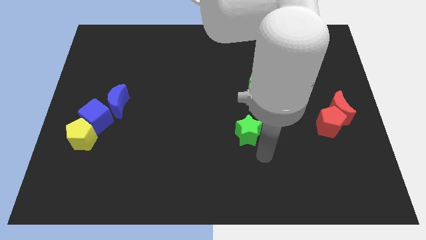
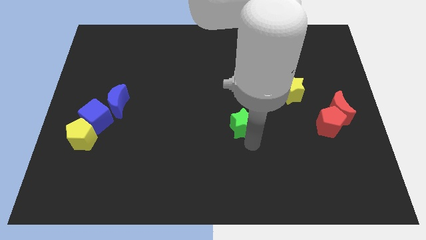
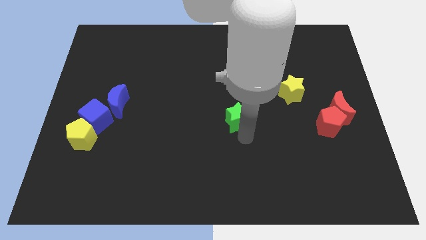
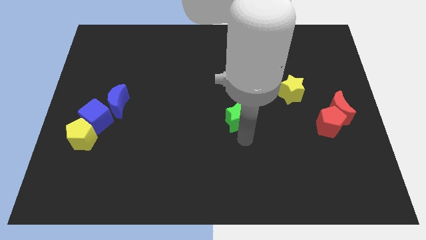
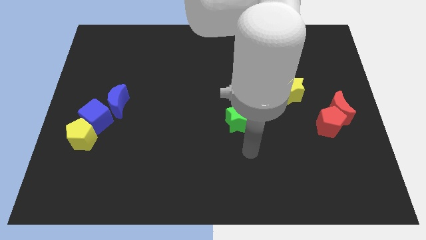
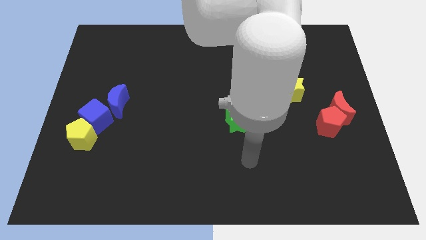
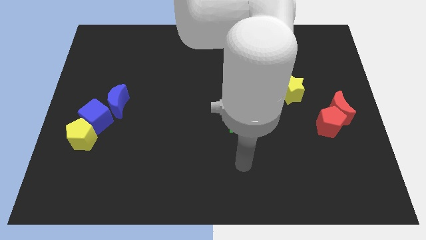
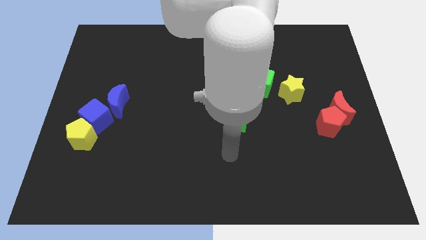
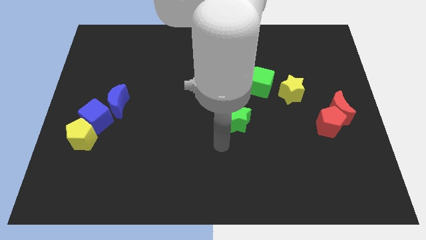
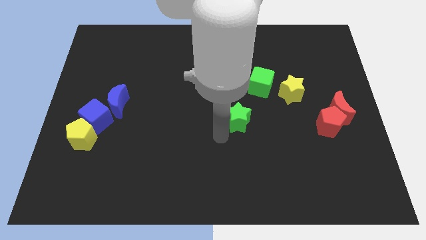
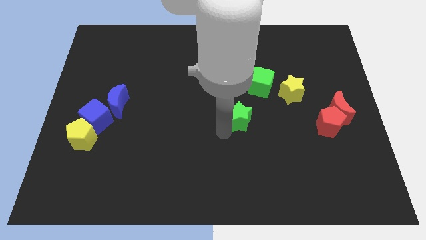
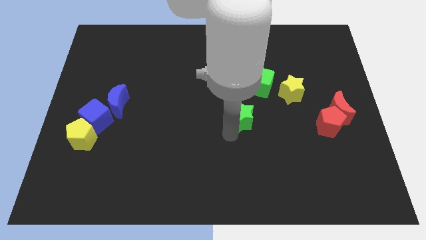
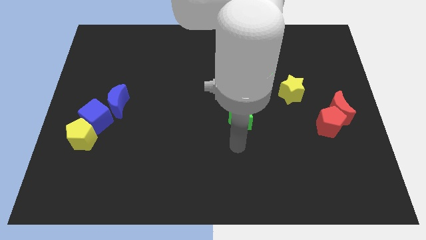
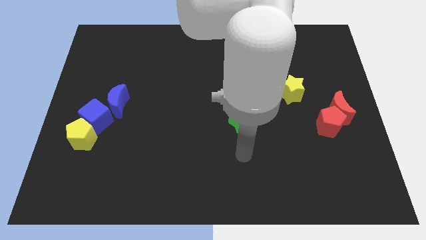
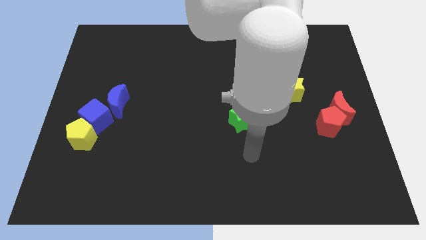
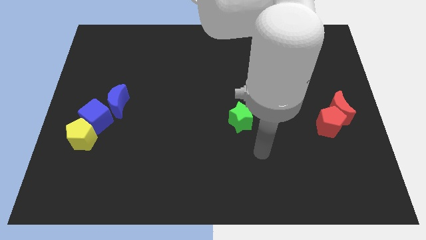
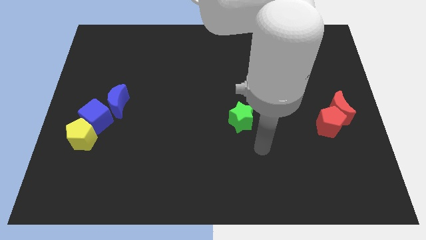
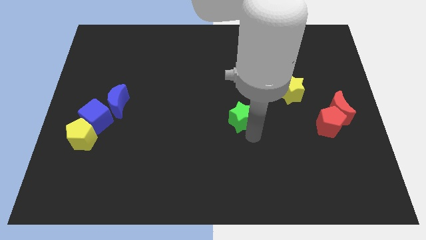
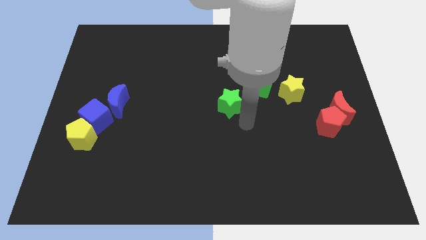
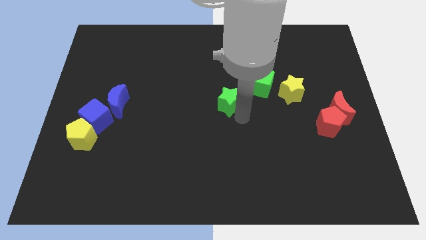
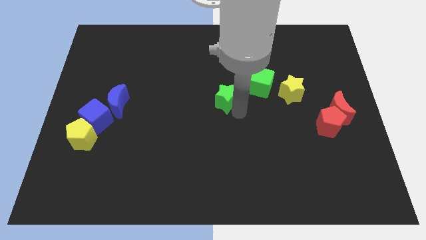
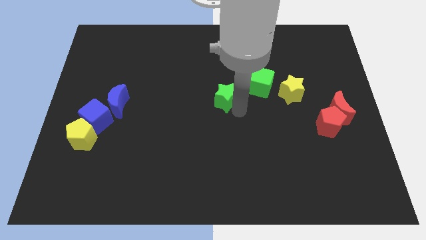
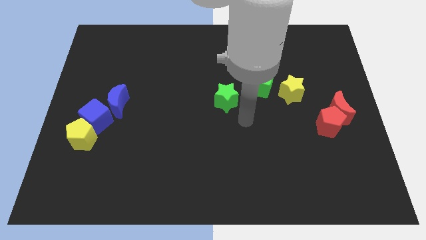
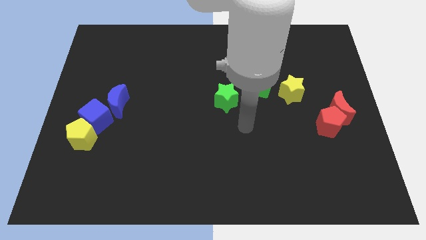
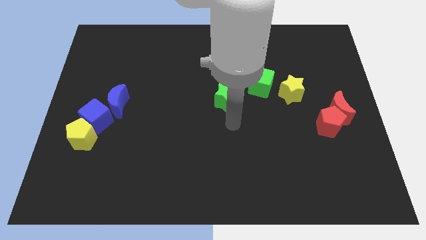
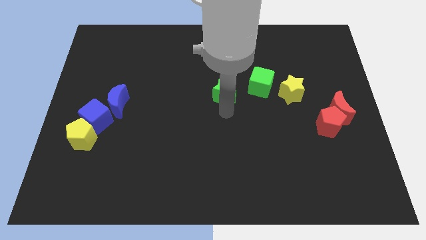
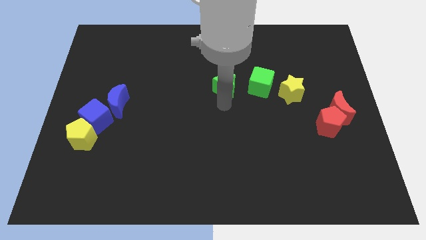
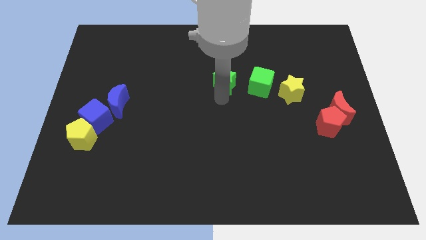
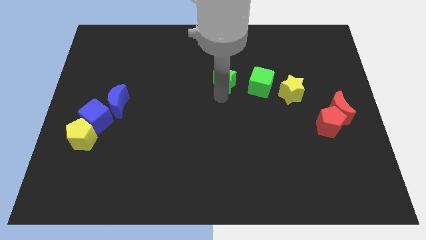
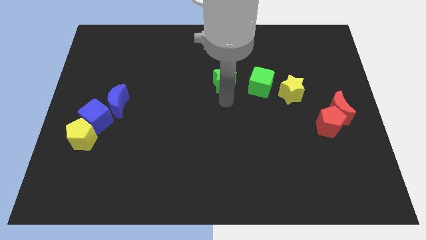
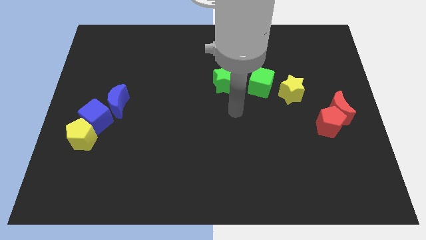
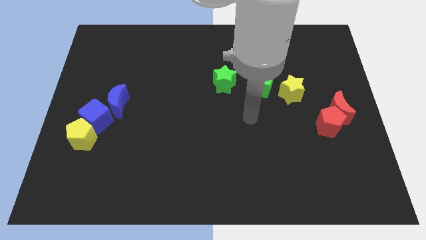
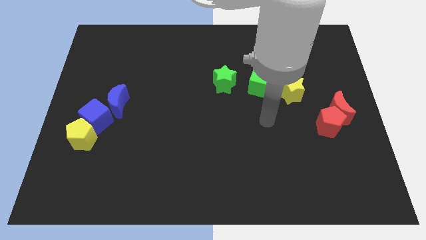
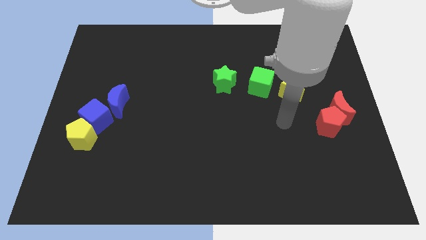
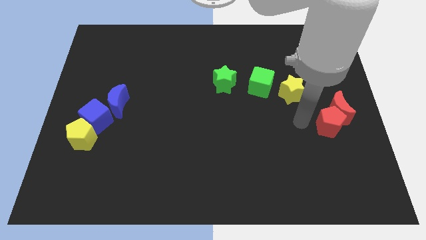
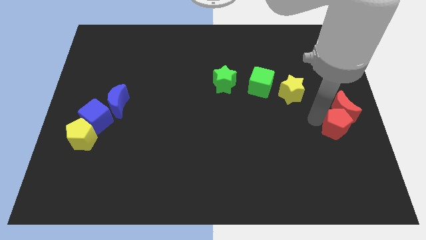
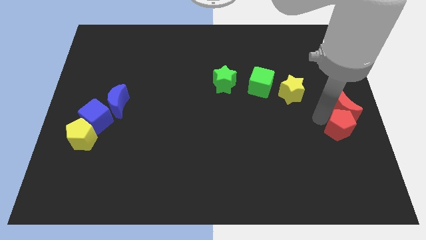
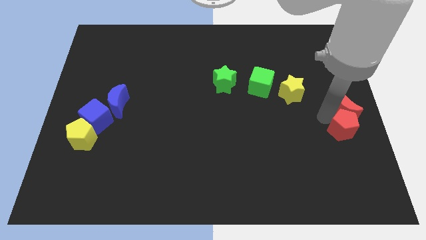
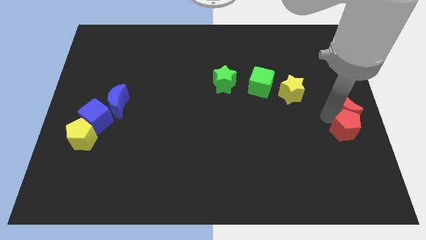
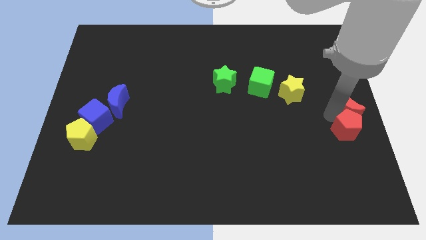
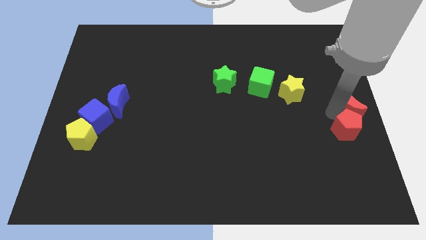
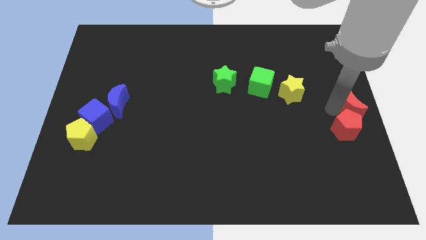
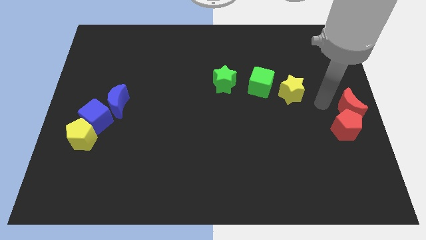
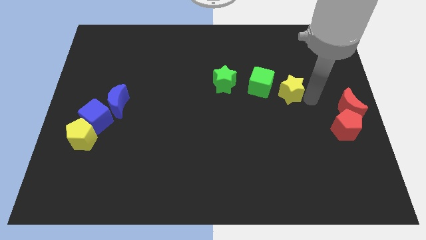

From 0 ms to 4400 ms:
move your arm to the right side of the yellow star

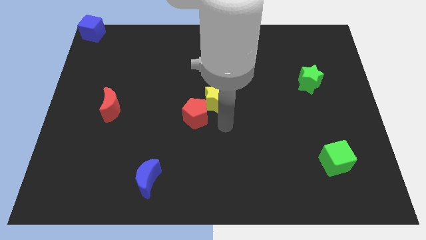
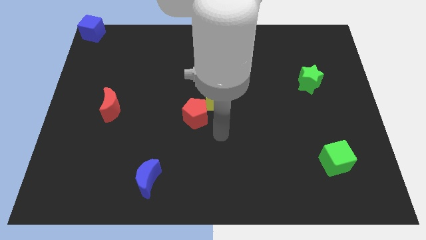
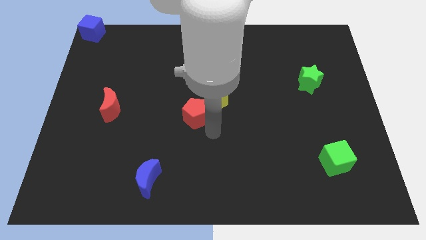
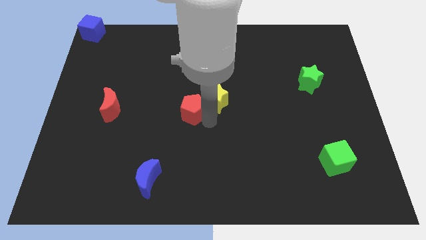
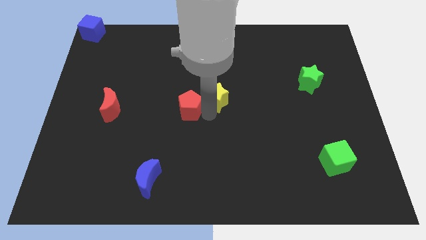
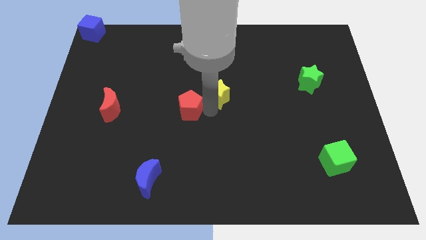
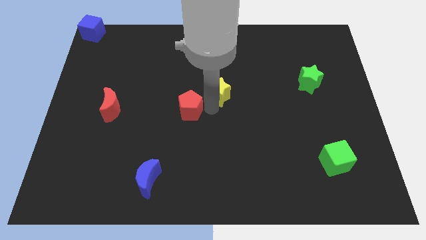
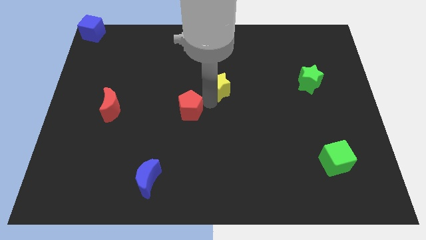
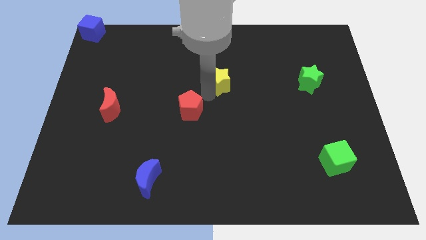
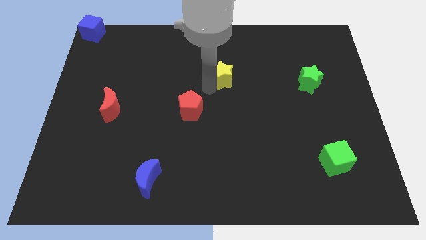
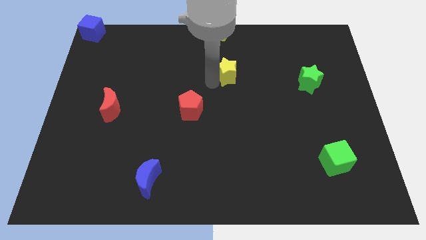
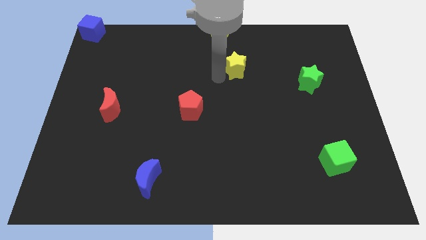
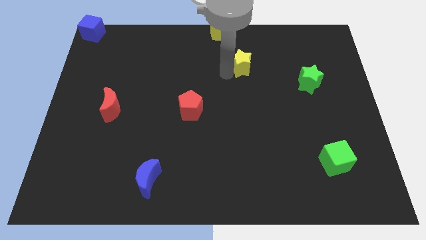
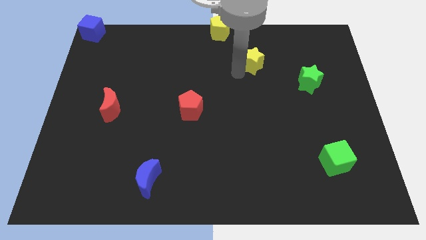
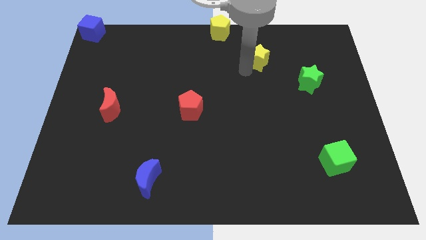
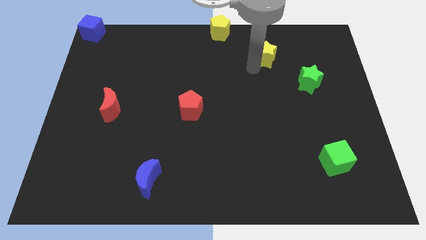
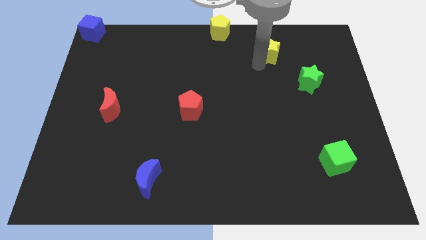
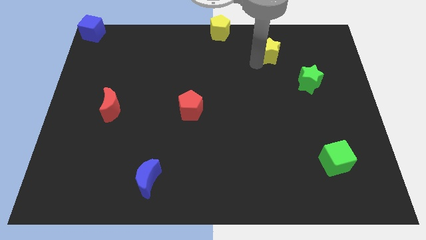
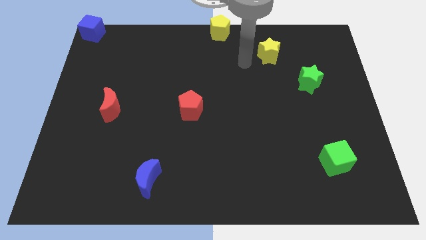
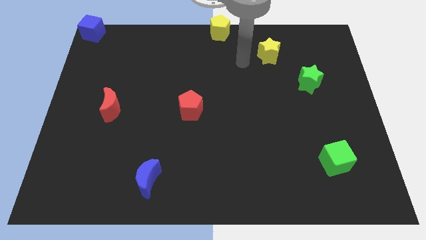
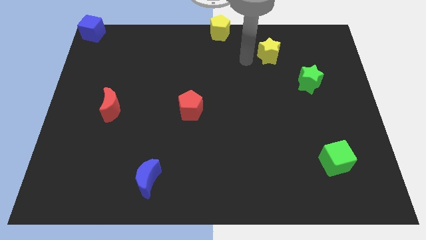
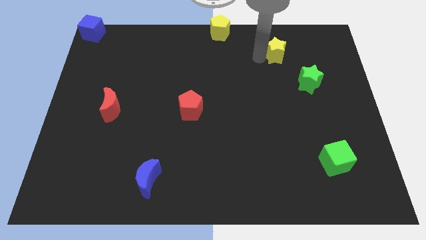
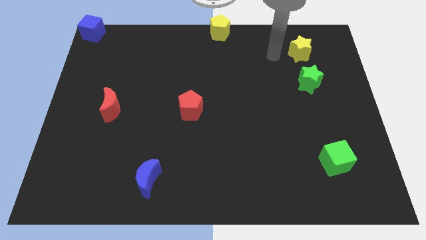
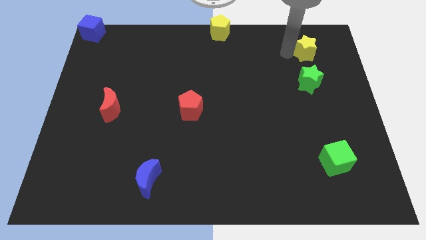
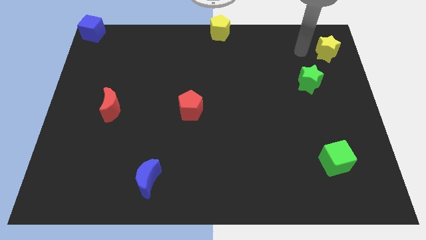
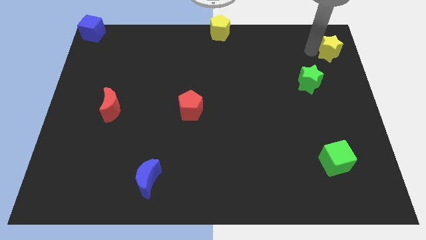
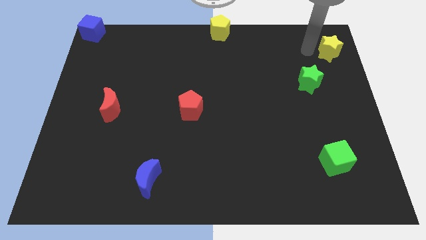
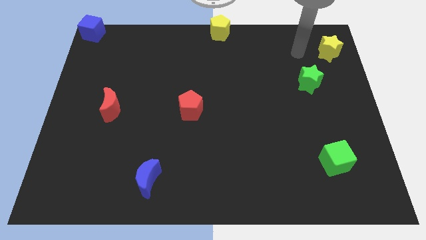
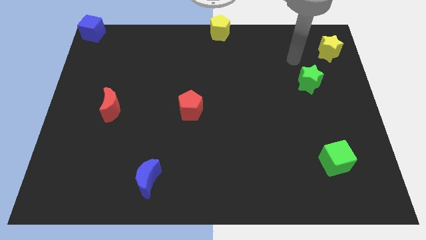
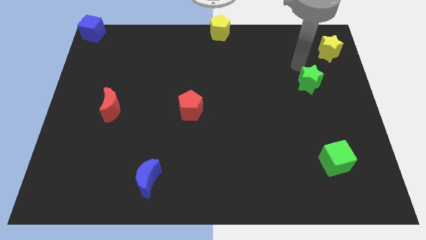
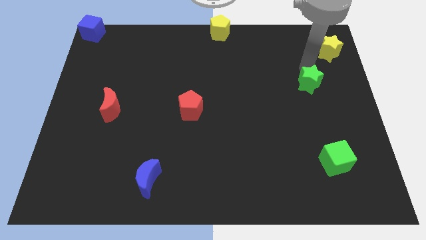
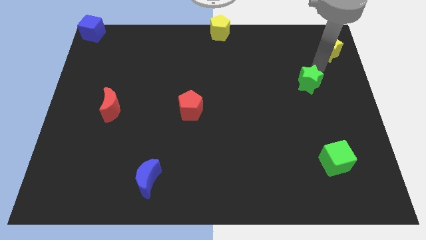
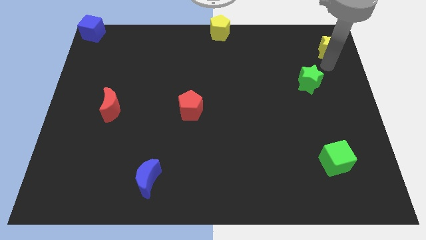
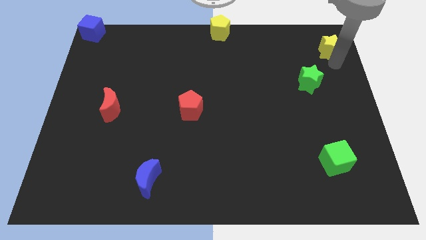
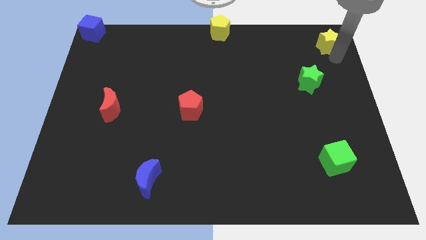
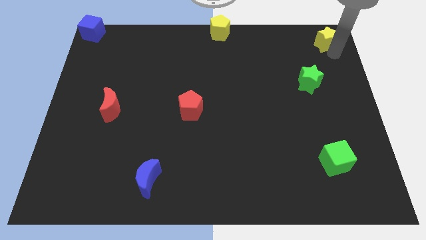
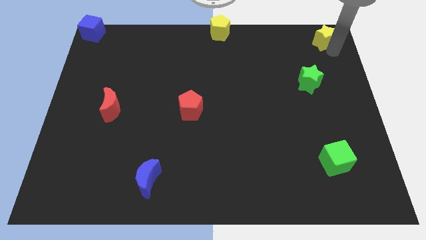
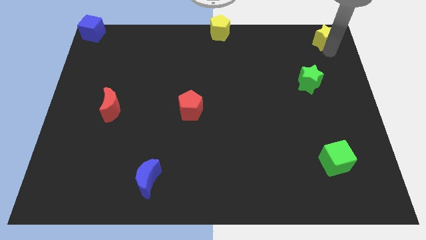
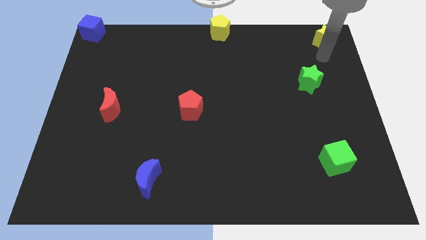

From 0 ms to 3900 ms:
push yellow star towards top right side

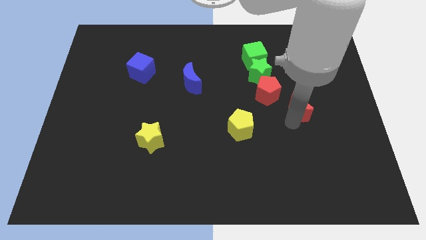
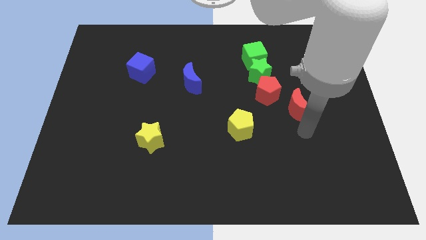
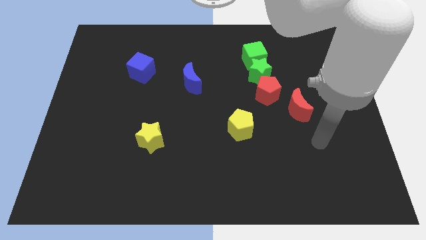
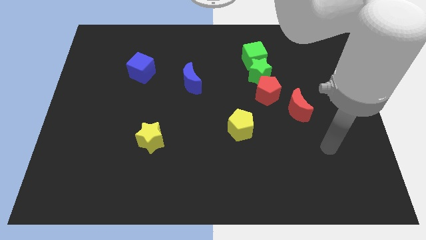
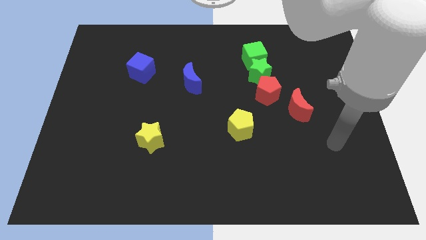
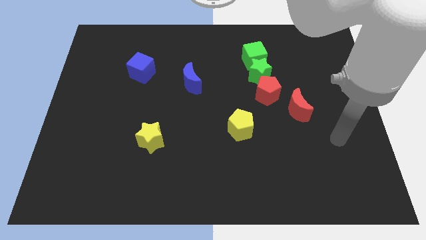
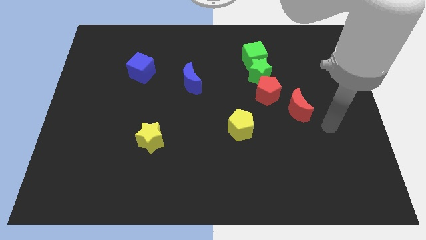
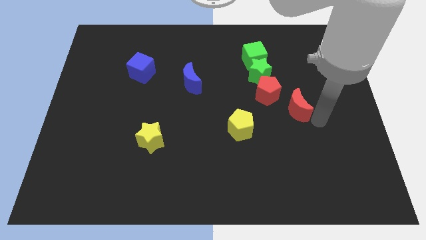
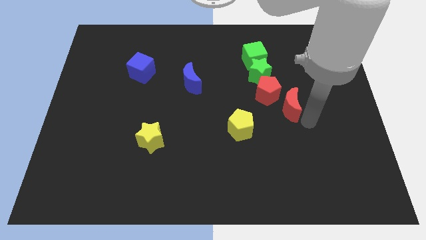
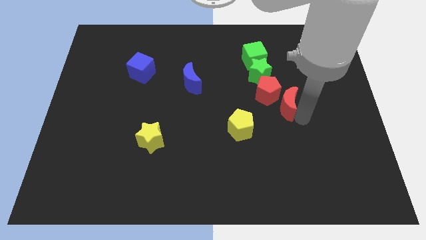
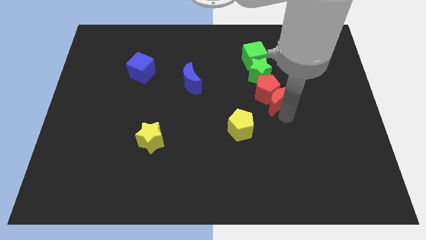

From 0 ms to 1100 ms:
move red moon right below the red pentagon
